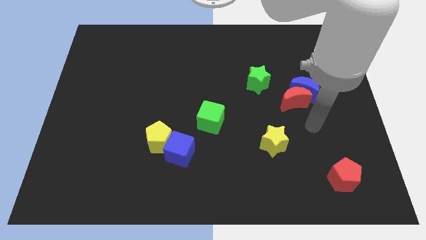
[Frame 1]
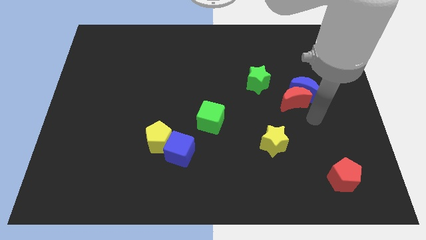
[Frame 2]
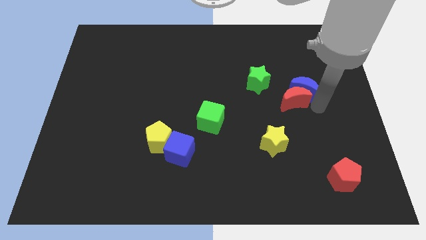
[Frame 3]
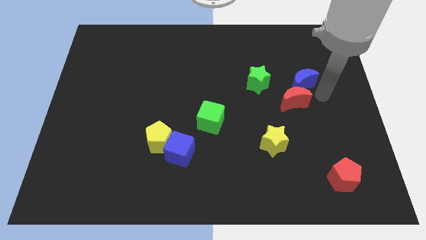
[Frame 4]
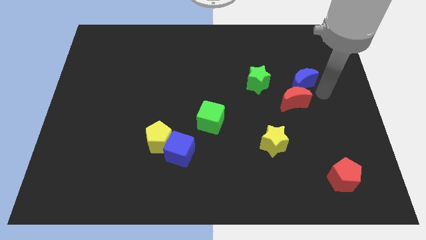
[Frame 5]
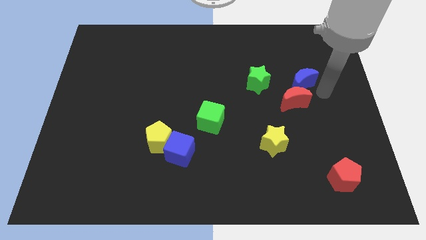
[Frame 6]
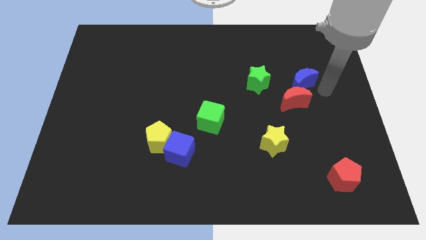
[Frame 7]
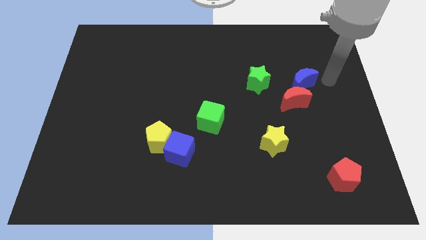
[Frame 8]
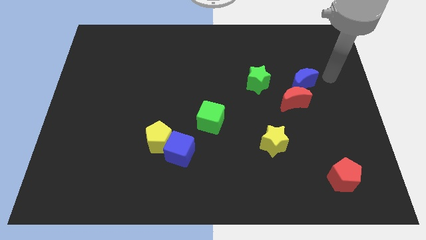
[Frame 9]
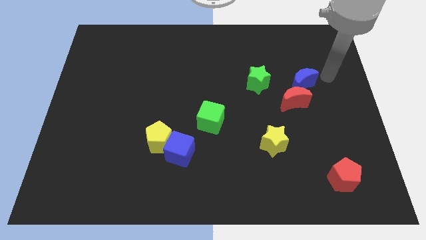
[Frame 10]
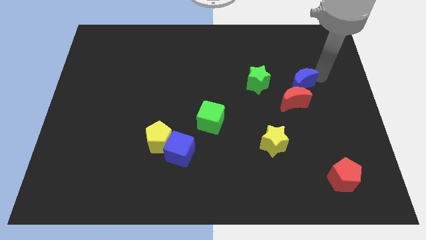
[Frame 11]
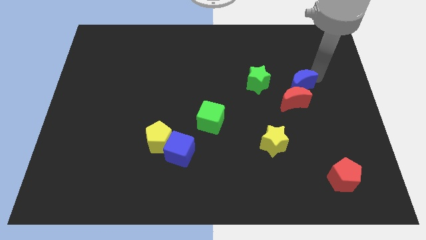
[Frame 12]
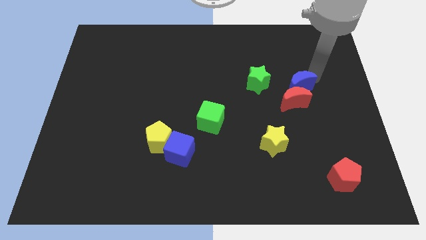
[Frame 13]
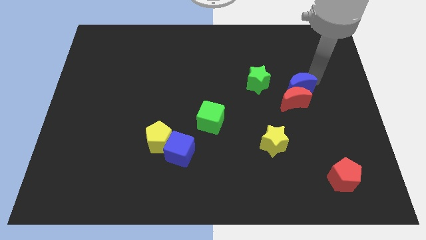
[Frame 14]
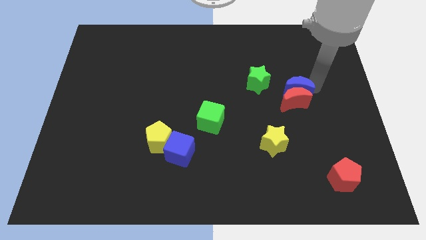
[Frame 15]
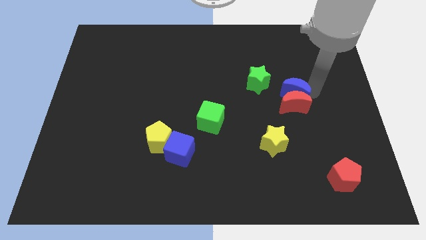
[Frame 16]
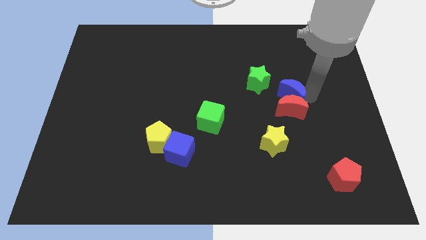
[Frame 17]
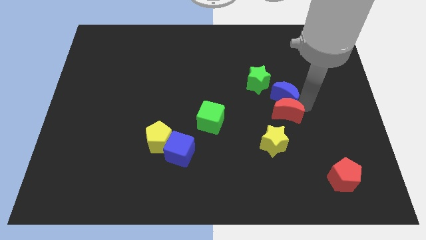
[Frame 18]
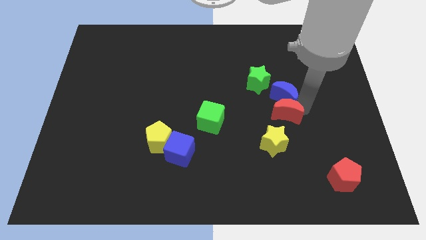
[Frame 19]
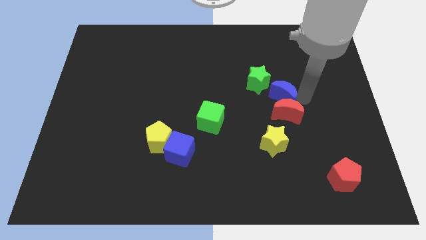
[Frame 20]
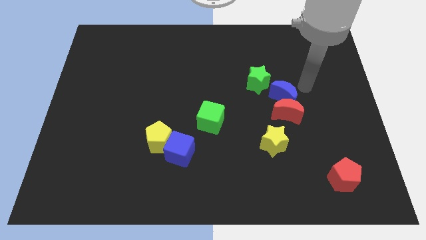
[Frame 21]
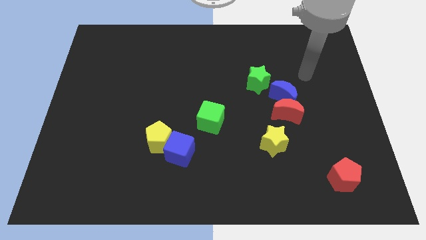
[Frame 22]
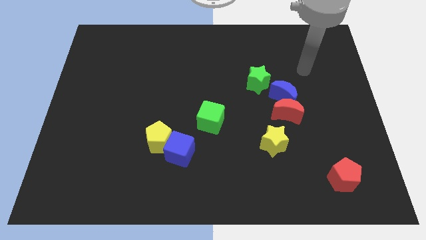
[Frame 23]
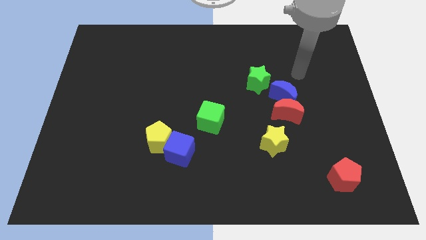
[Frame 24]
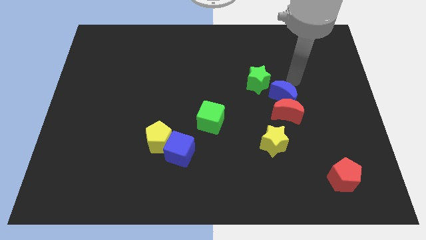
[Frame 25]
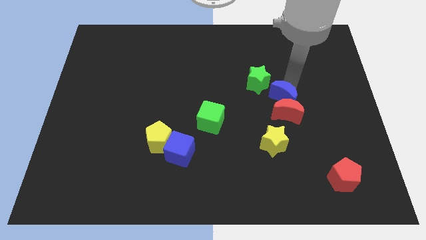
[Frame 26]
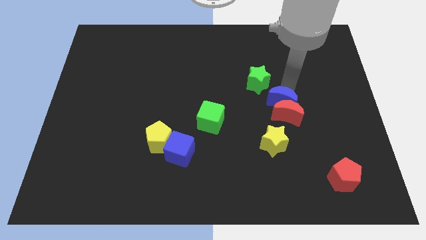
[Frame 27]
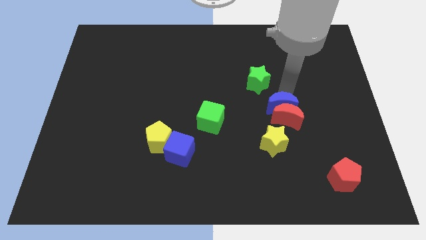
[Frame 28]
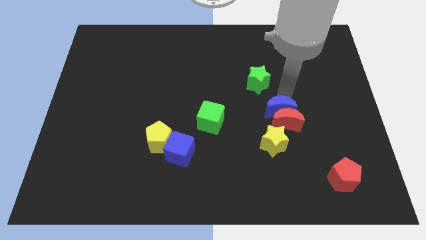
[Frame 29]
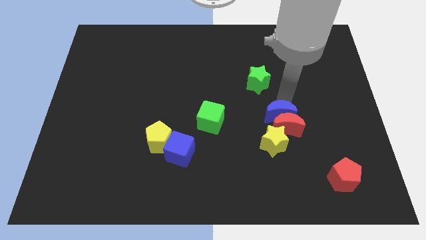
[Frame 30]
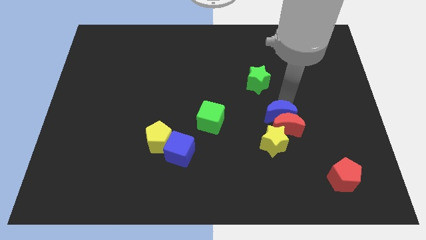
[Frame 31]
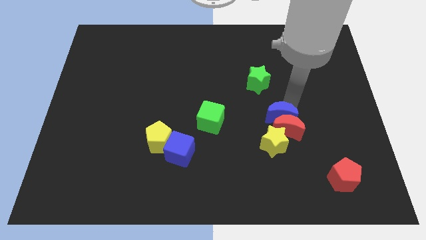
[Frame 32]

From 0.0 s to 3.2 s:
push blue moon towards its bottom

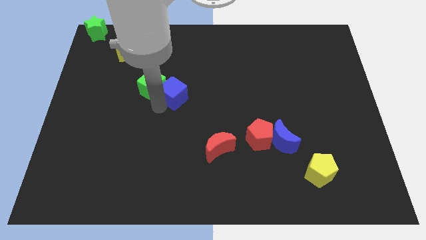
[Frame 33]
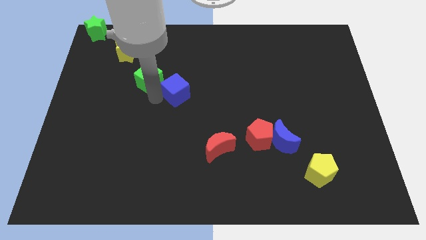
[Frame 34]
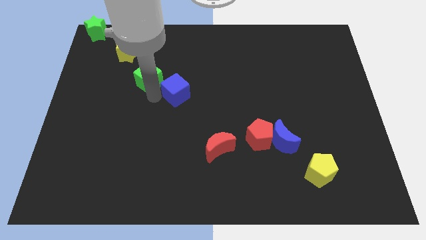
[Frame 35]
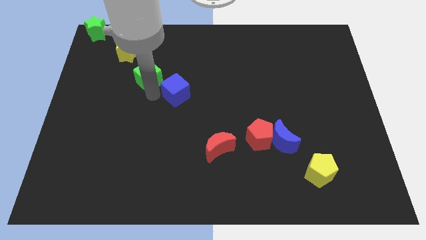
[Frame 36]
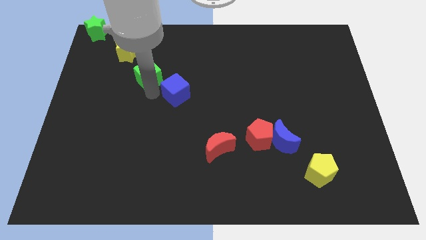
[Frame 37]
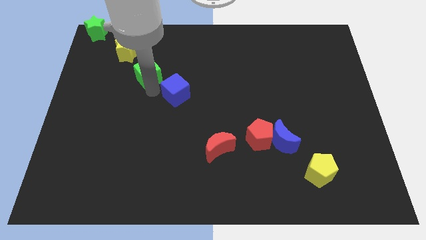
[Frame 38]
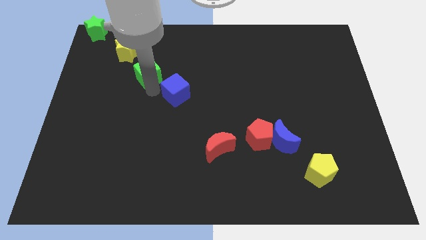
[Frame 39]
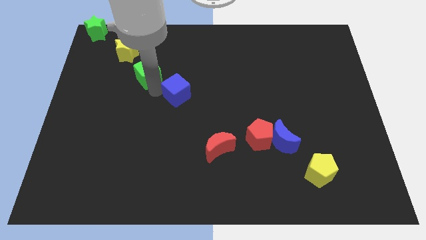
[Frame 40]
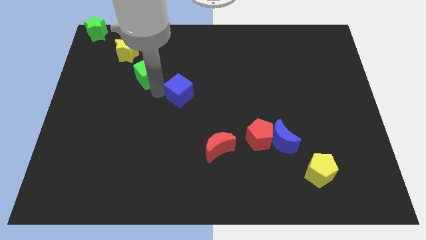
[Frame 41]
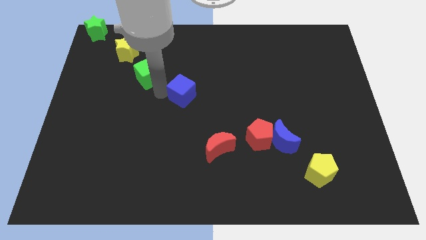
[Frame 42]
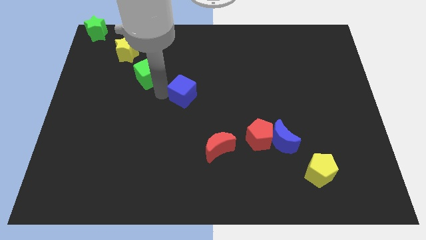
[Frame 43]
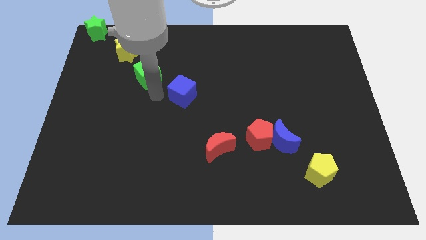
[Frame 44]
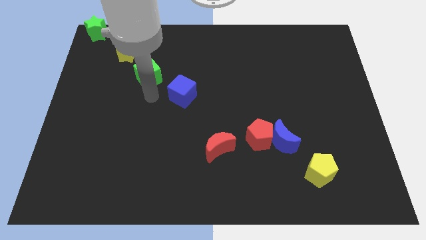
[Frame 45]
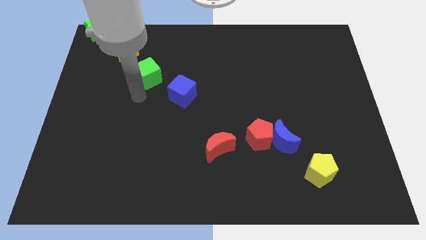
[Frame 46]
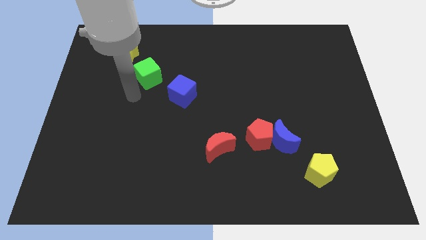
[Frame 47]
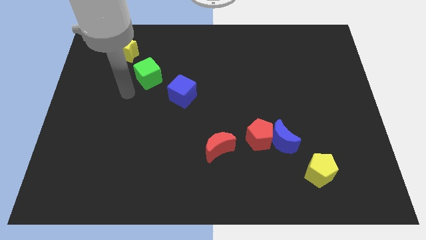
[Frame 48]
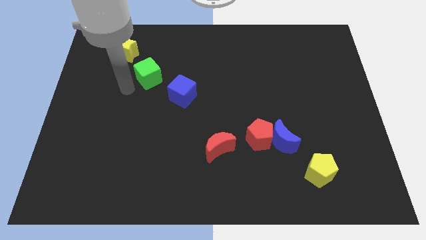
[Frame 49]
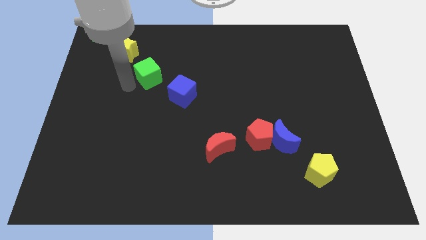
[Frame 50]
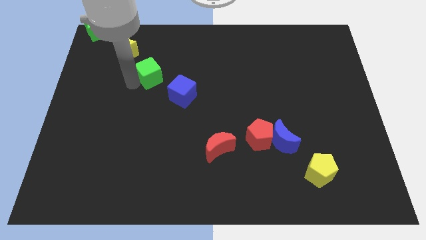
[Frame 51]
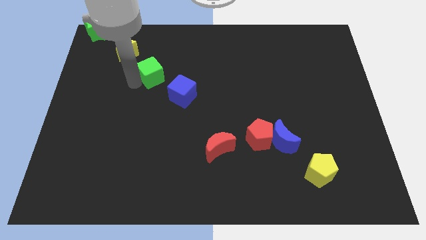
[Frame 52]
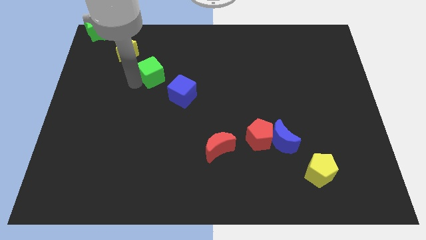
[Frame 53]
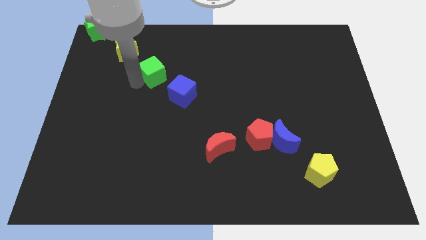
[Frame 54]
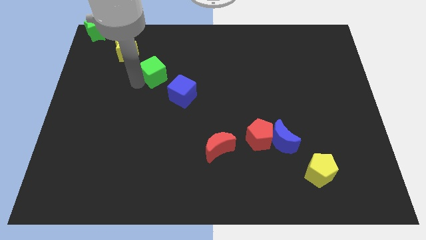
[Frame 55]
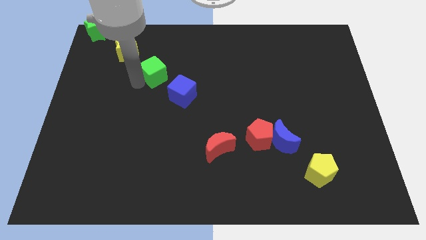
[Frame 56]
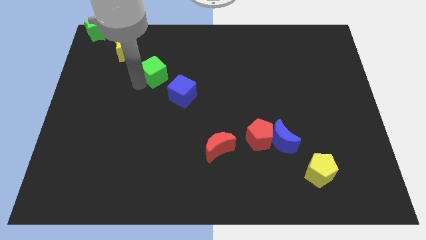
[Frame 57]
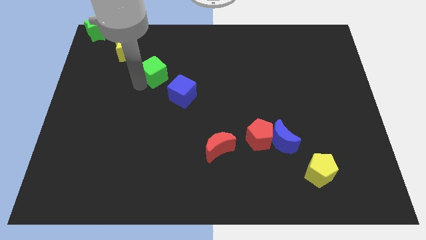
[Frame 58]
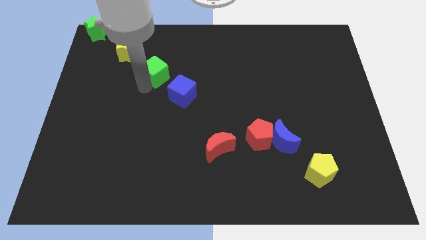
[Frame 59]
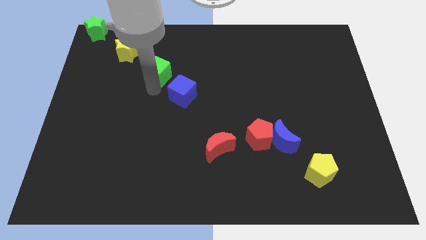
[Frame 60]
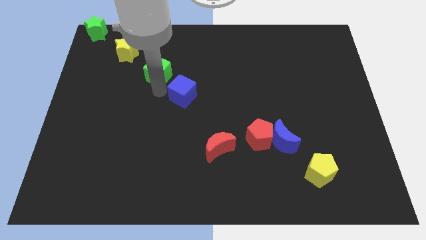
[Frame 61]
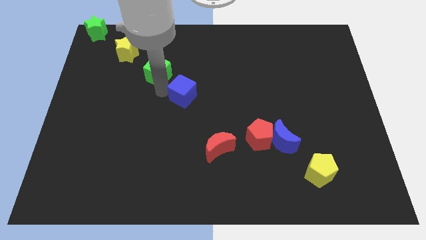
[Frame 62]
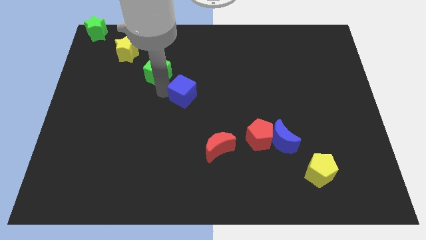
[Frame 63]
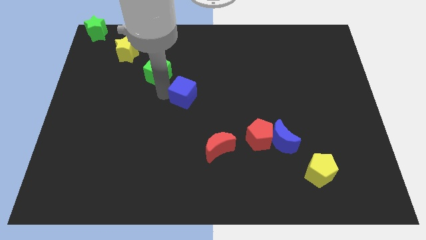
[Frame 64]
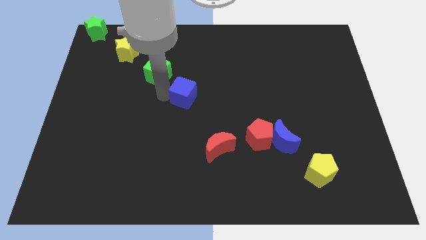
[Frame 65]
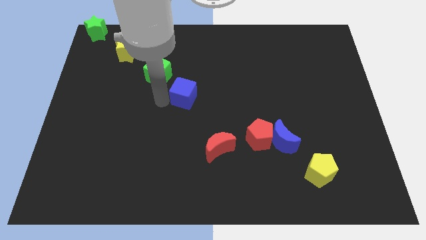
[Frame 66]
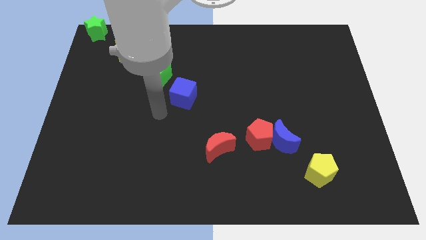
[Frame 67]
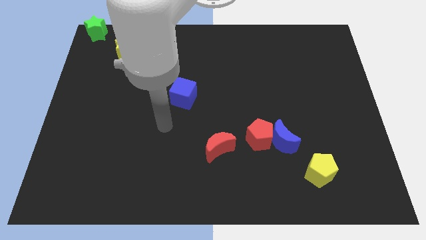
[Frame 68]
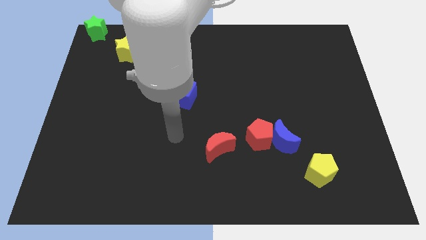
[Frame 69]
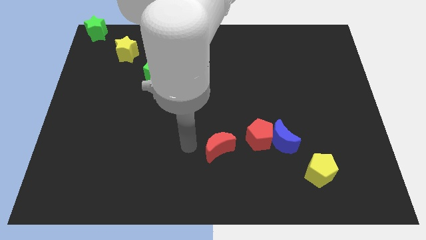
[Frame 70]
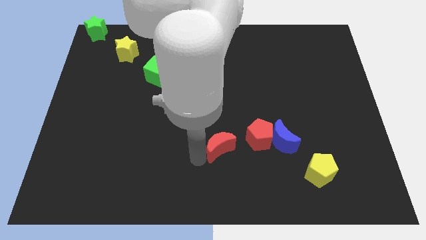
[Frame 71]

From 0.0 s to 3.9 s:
separate blue cube and green cube

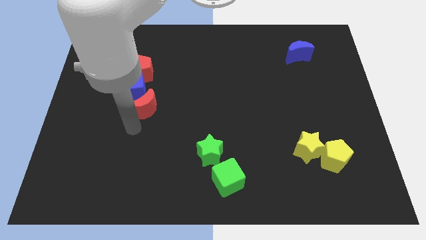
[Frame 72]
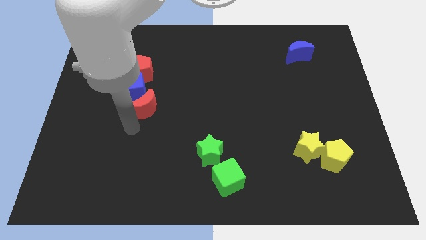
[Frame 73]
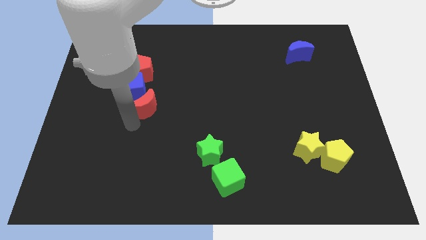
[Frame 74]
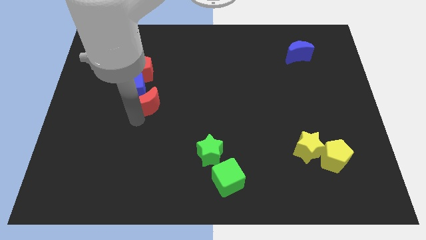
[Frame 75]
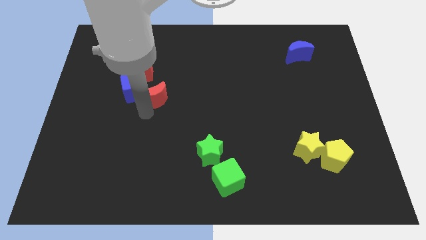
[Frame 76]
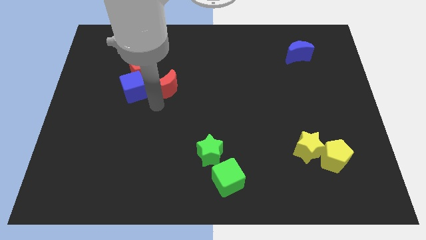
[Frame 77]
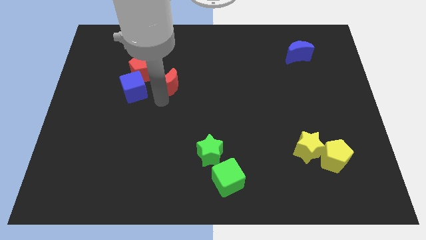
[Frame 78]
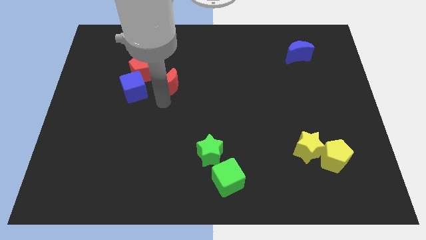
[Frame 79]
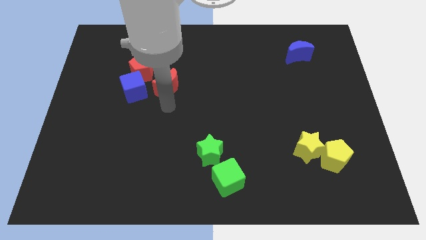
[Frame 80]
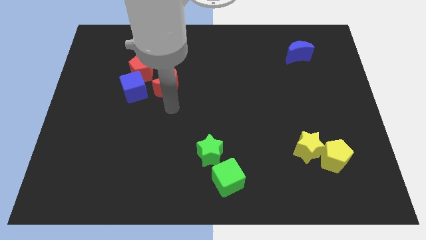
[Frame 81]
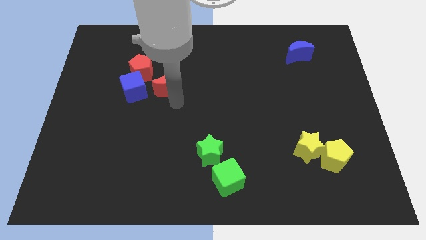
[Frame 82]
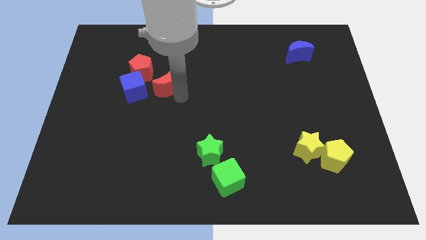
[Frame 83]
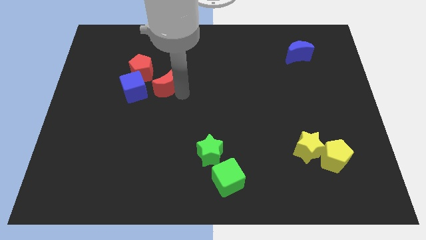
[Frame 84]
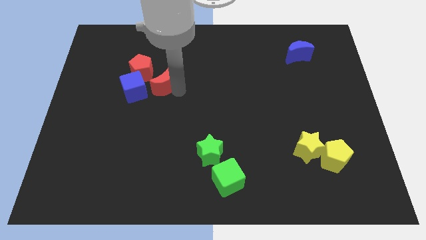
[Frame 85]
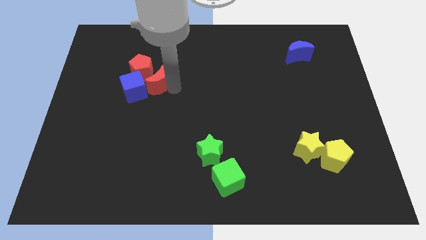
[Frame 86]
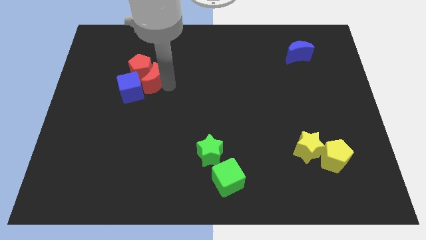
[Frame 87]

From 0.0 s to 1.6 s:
move the red crescent into the right of the red pentagon

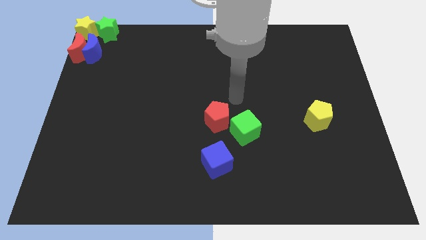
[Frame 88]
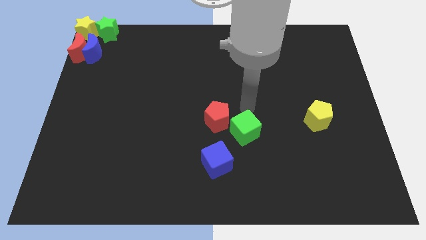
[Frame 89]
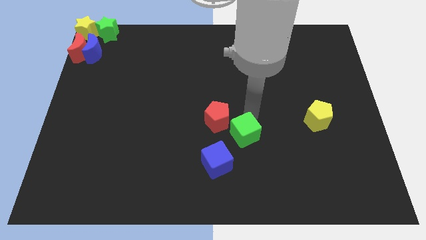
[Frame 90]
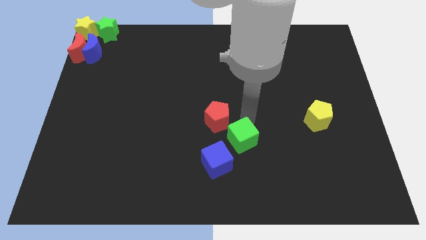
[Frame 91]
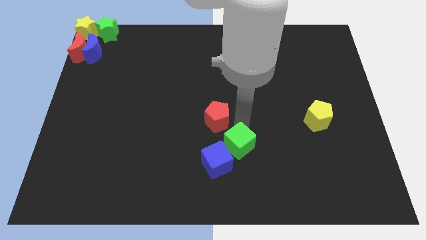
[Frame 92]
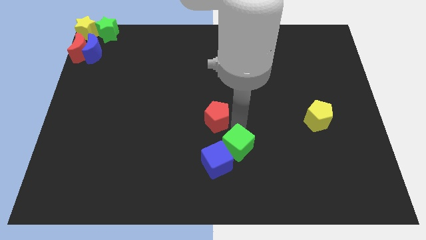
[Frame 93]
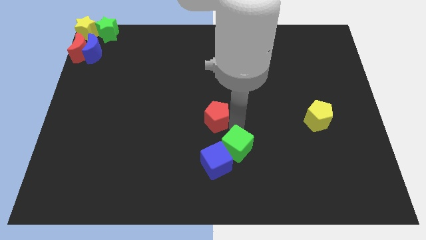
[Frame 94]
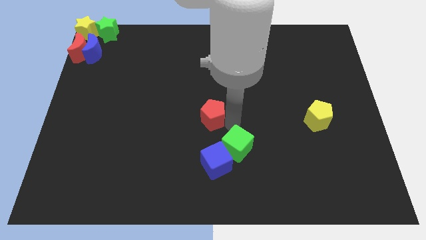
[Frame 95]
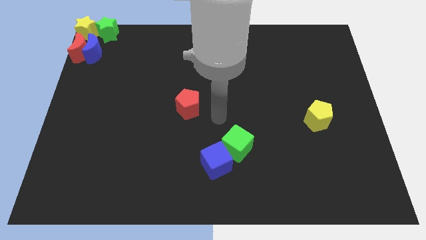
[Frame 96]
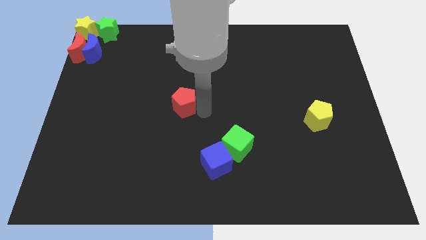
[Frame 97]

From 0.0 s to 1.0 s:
separate red pentagon and green club
